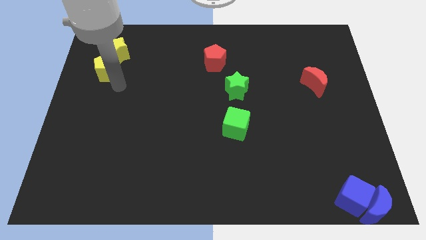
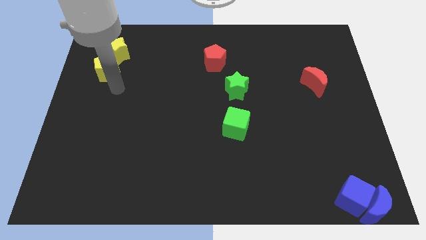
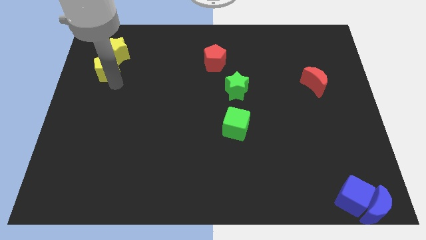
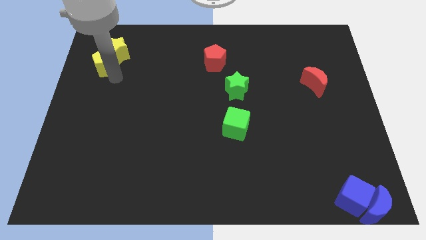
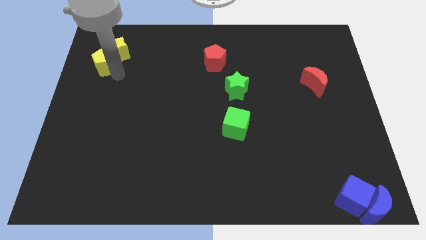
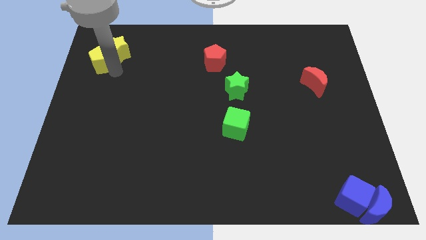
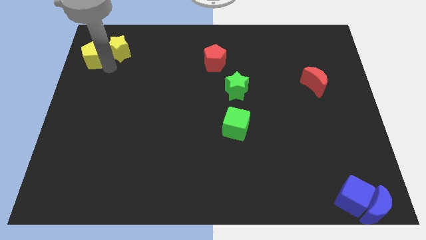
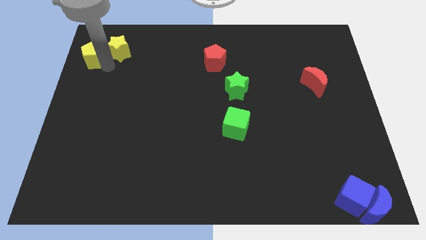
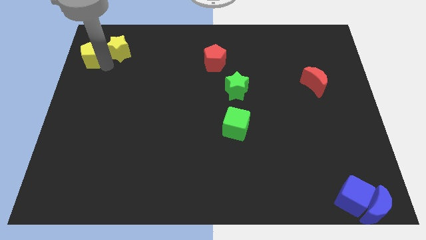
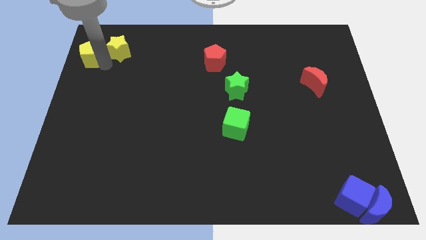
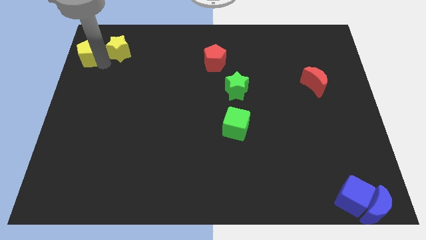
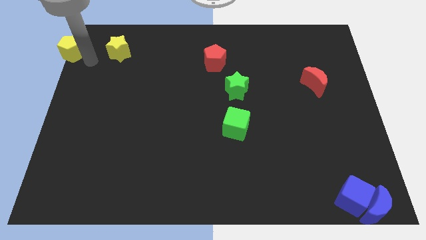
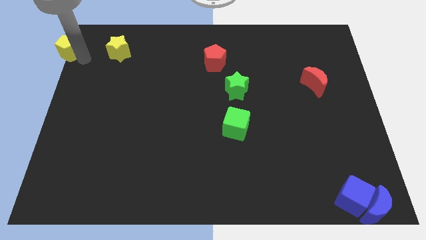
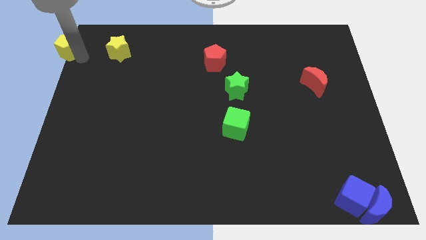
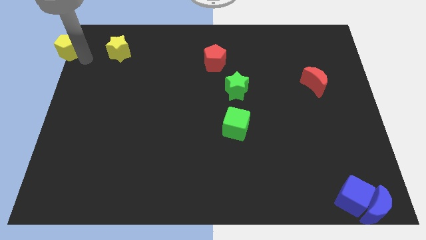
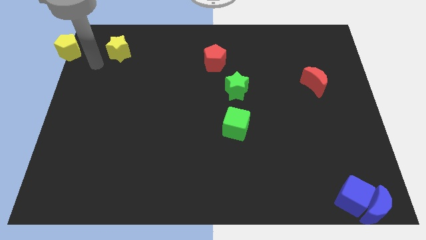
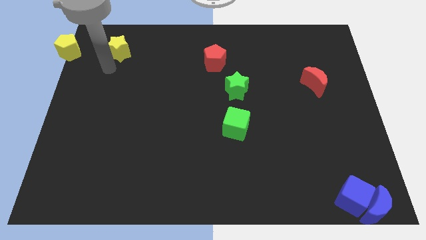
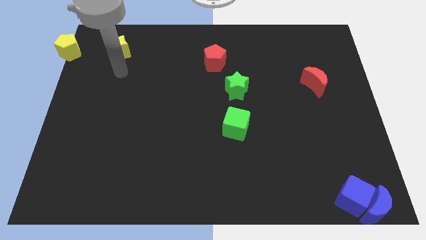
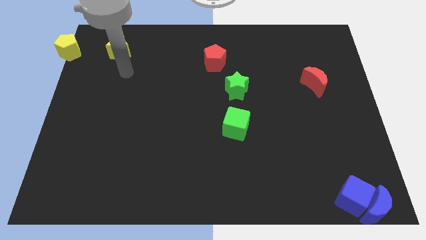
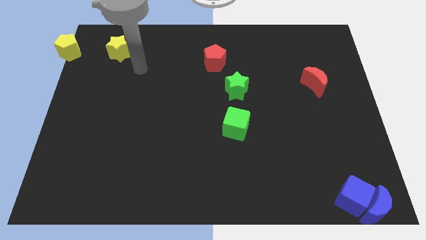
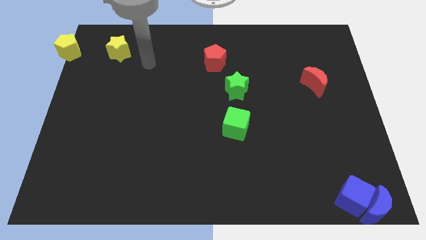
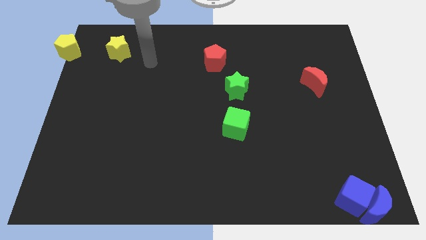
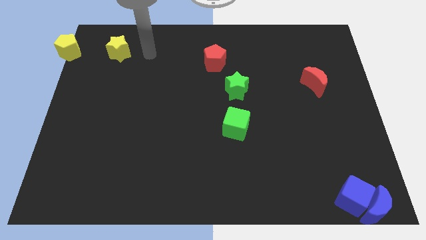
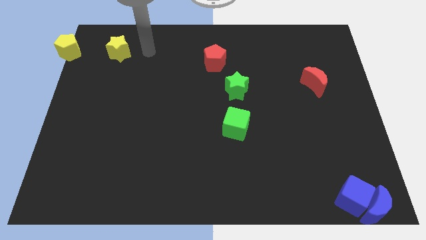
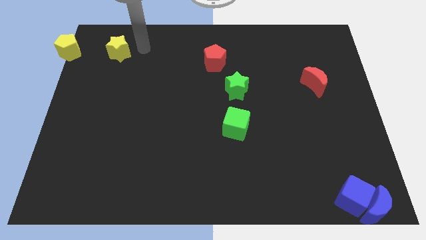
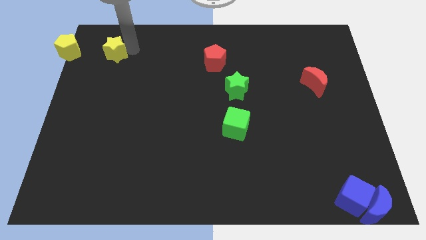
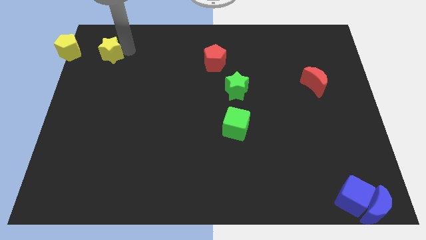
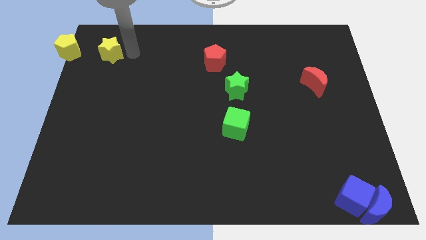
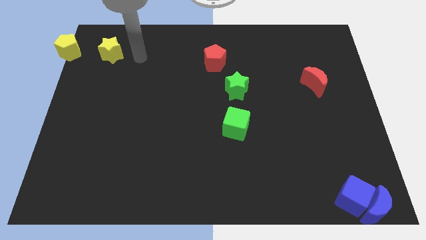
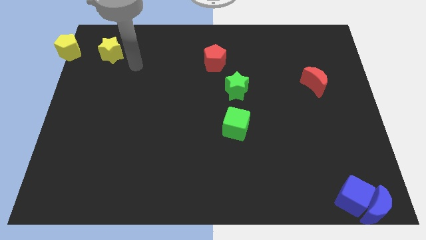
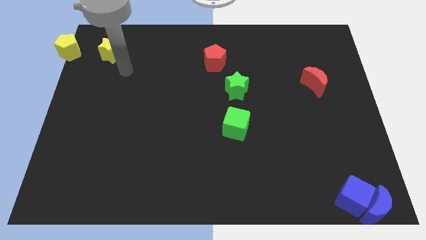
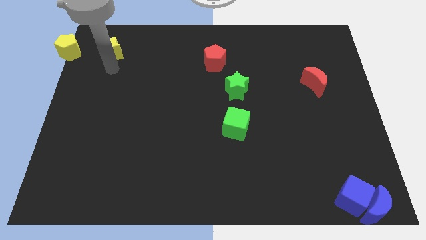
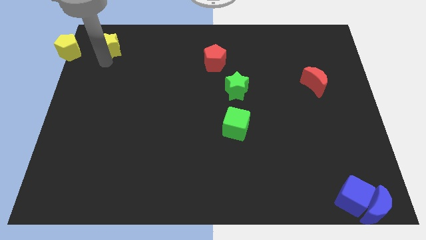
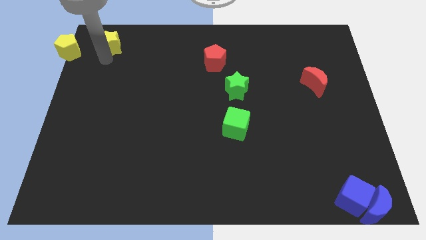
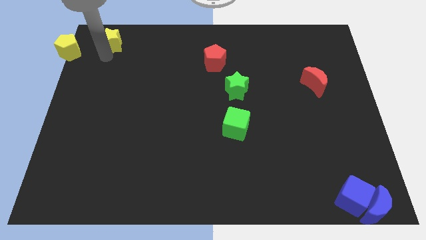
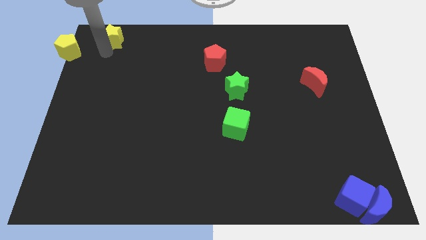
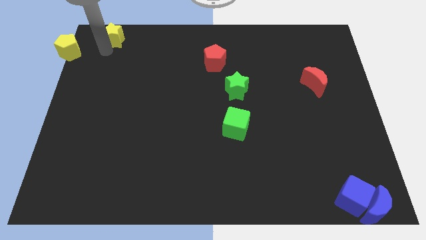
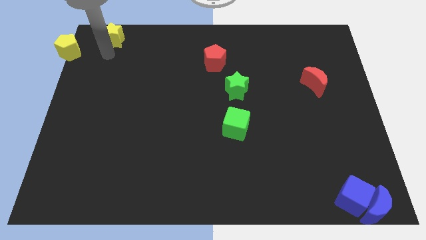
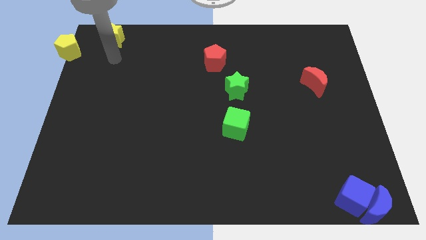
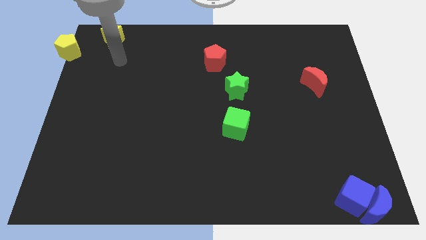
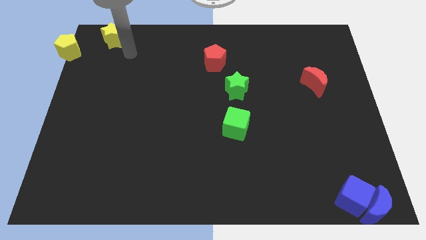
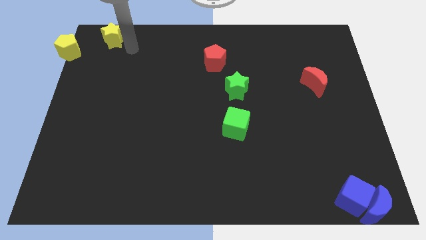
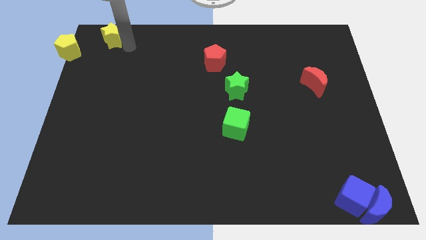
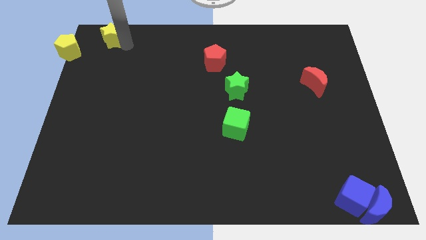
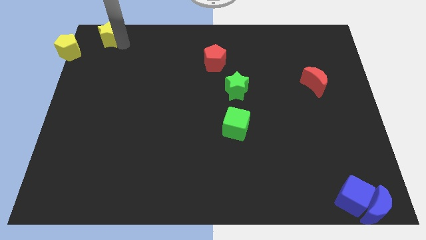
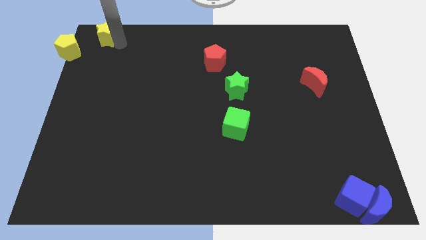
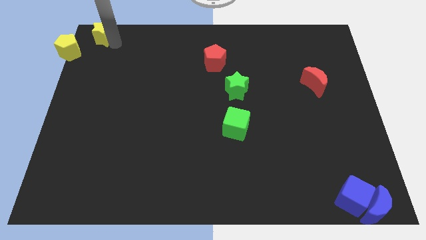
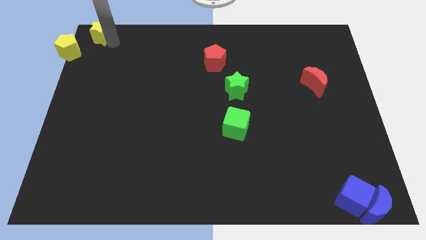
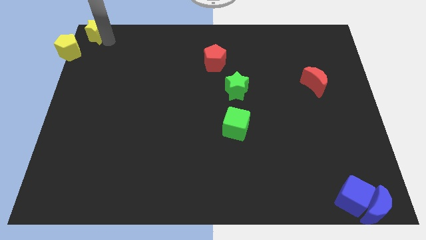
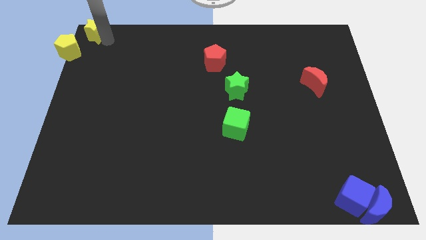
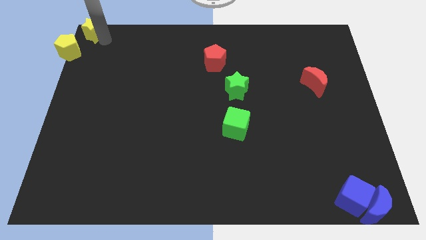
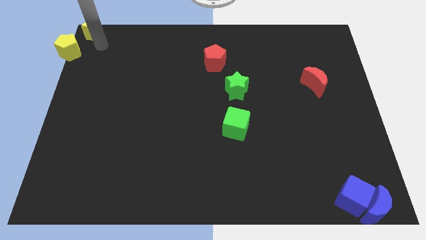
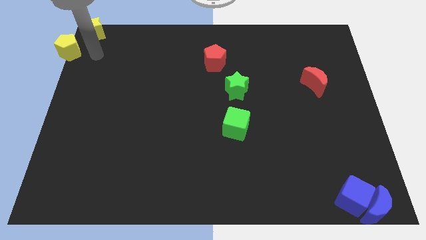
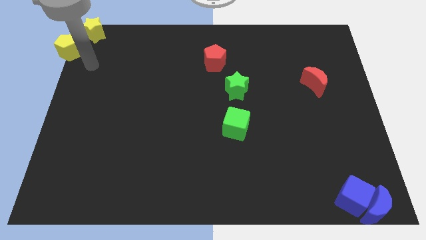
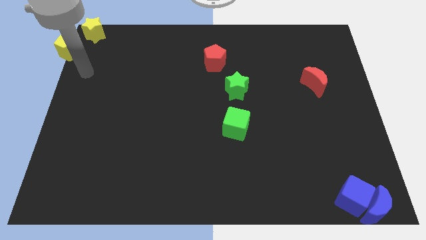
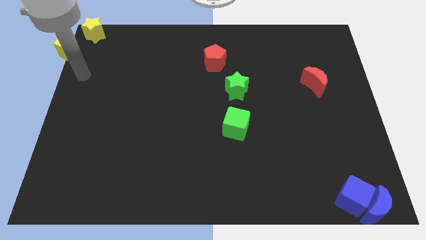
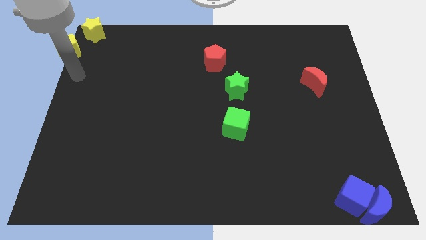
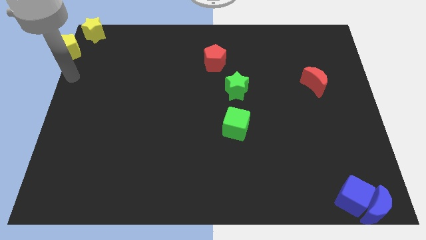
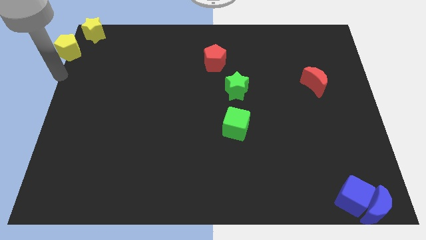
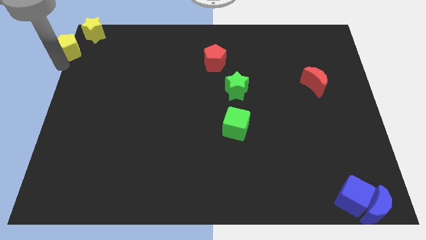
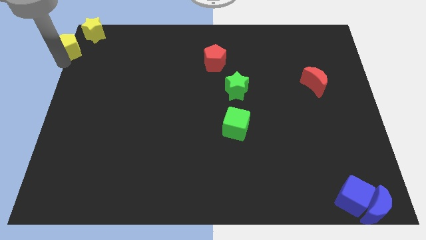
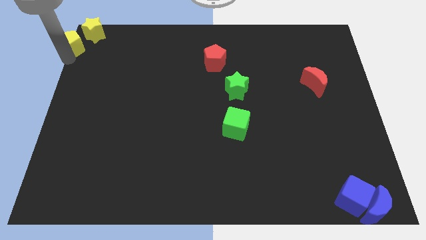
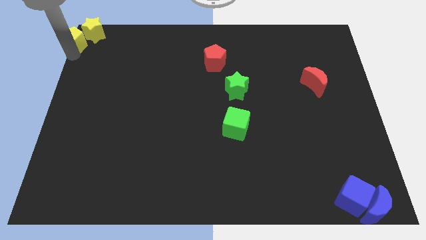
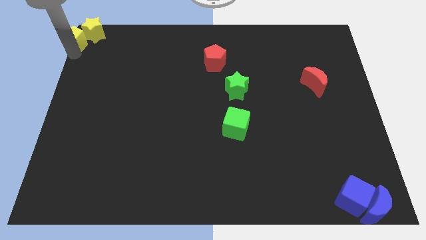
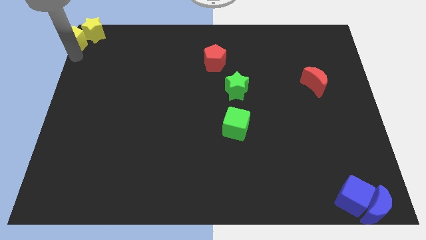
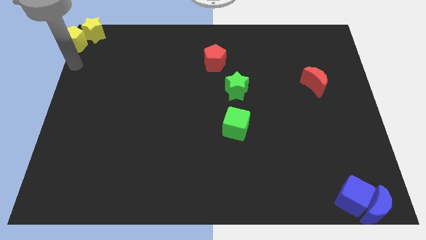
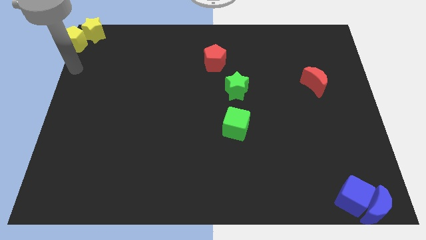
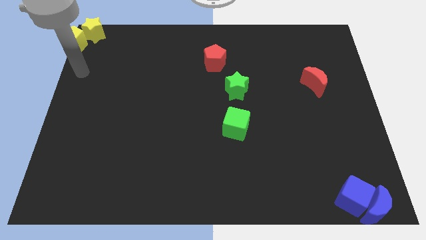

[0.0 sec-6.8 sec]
push the yellow star and yellow pentagon to the top left side of the board

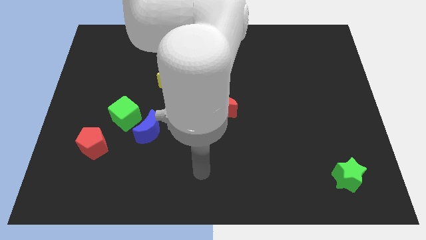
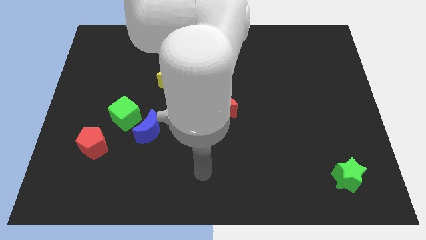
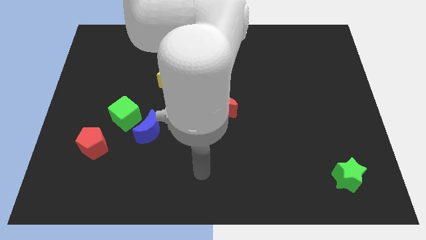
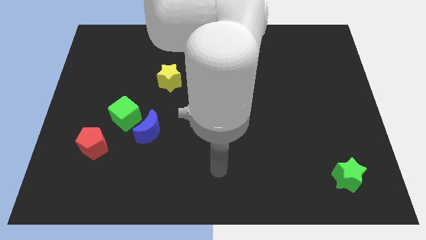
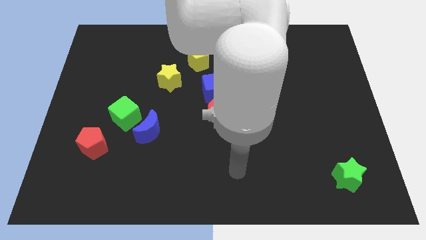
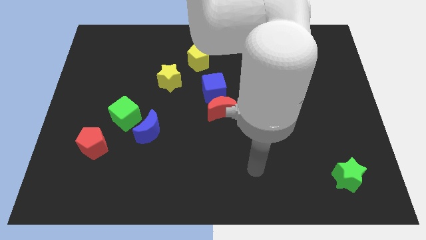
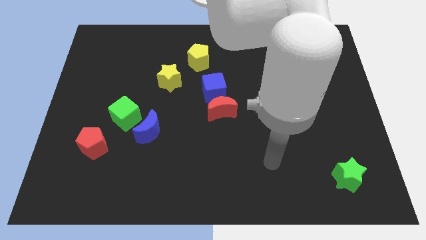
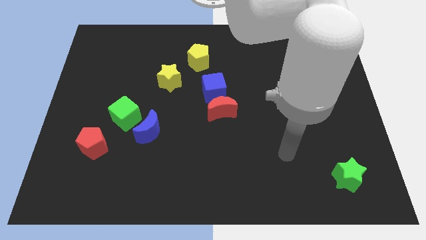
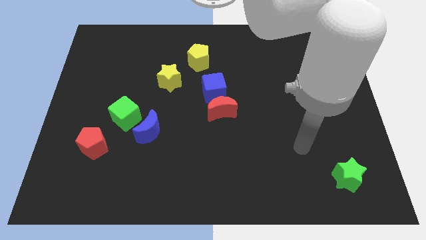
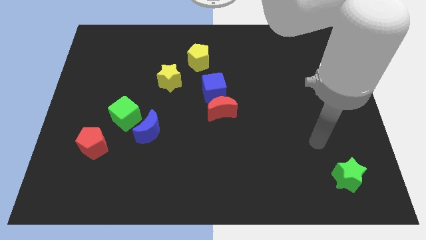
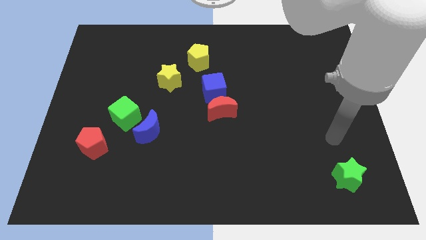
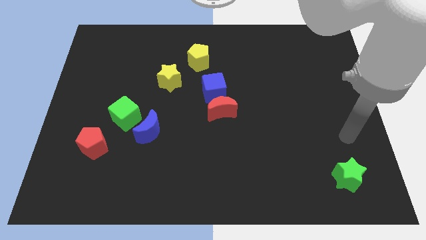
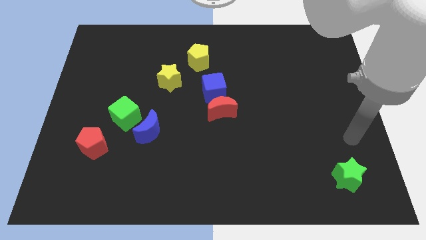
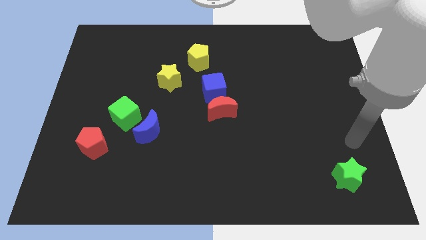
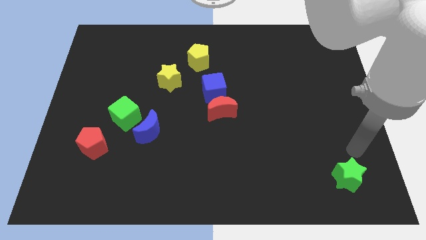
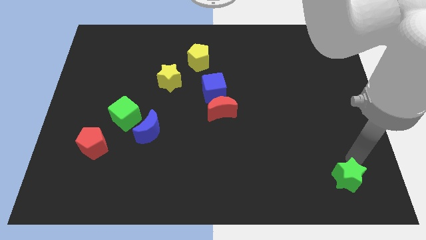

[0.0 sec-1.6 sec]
point your arm at the top of green star

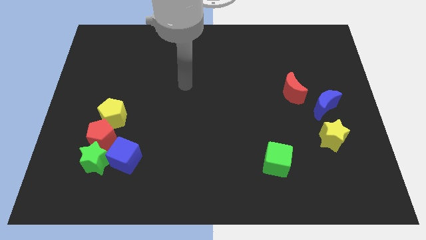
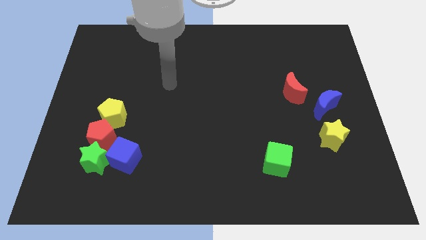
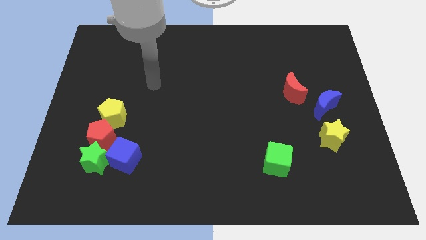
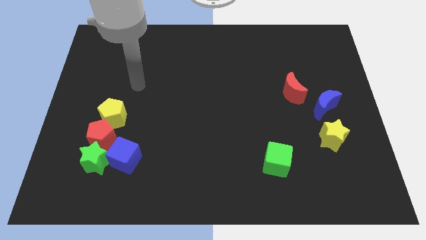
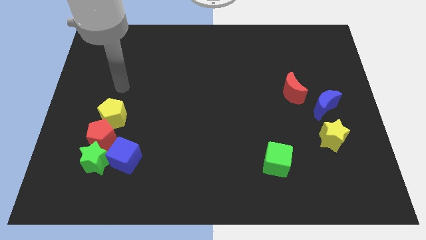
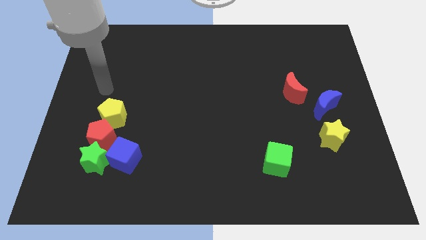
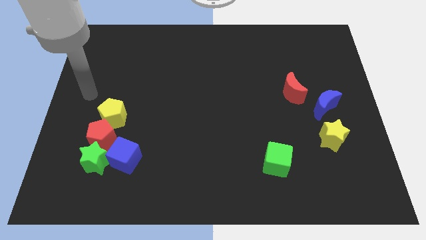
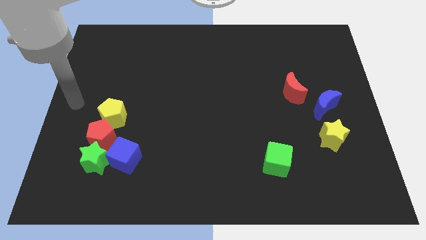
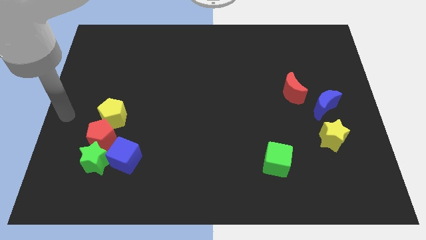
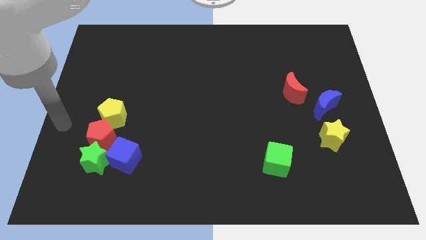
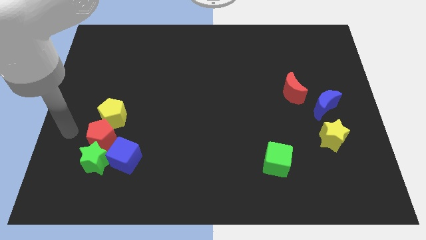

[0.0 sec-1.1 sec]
go to the left side of the red pentagon
